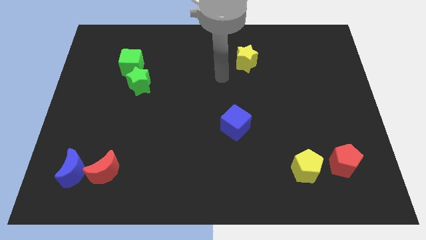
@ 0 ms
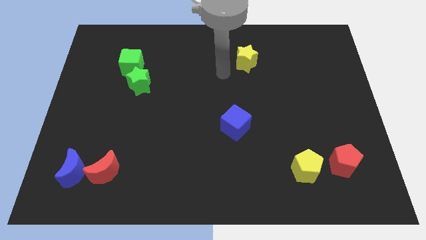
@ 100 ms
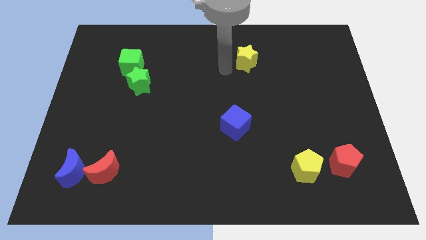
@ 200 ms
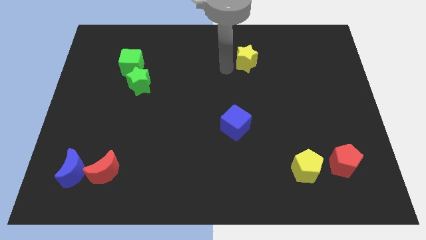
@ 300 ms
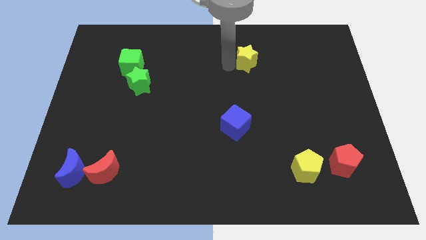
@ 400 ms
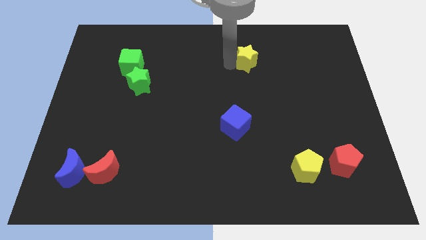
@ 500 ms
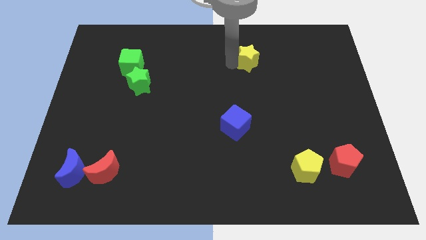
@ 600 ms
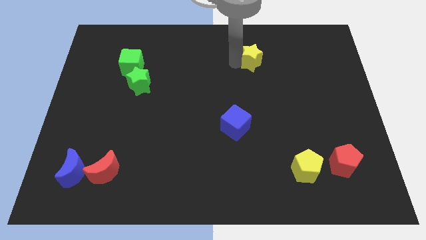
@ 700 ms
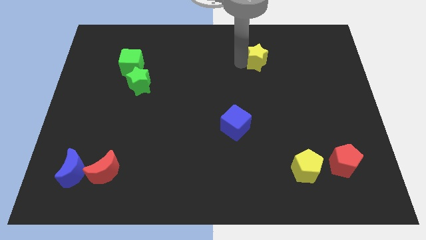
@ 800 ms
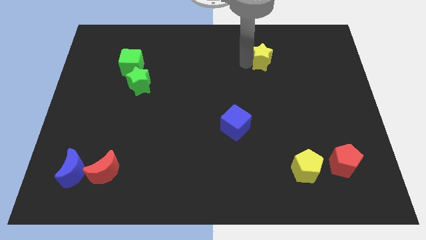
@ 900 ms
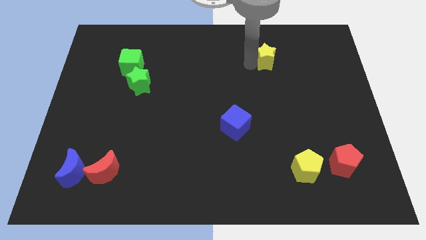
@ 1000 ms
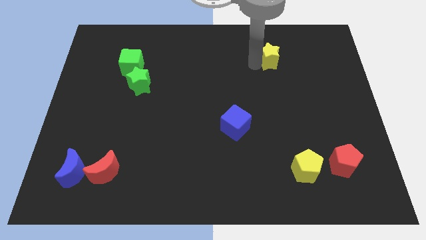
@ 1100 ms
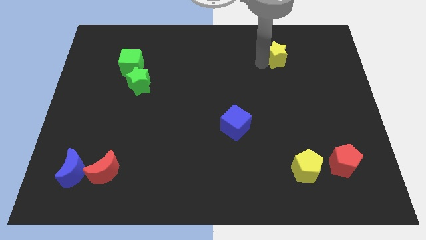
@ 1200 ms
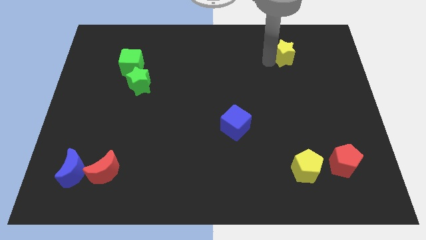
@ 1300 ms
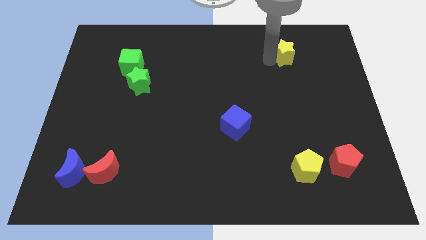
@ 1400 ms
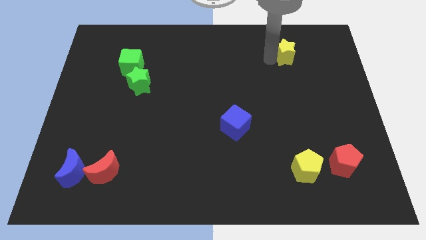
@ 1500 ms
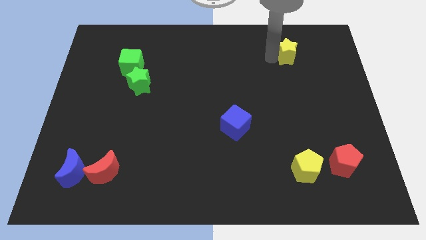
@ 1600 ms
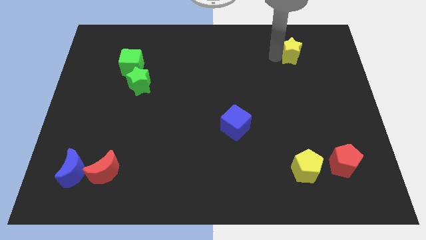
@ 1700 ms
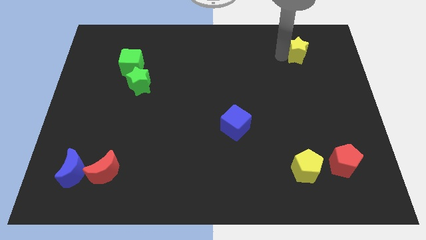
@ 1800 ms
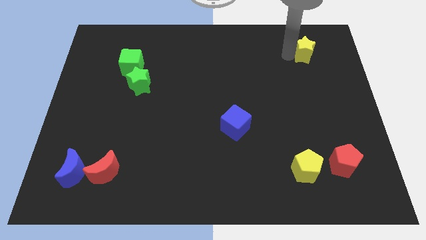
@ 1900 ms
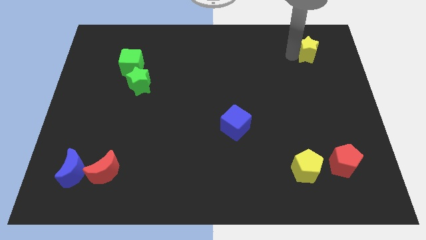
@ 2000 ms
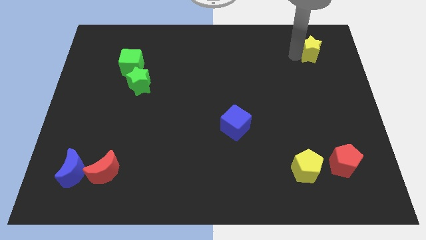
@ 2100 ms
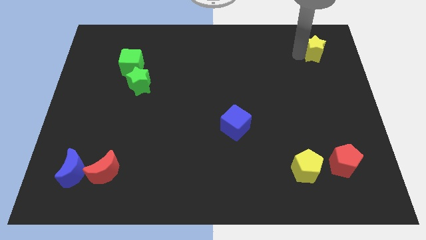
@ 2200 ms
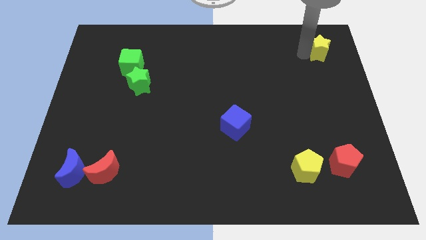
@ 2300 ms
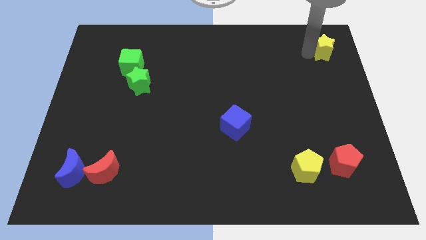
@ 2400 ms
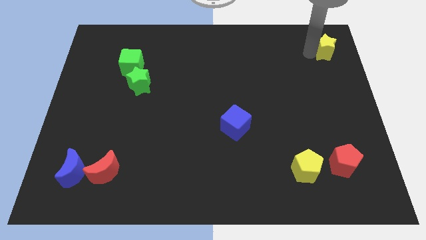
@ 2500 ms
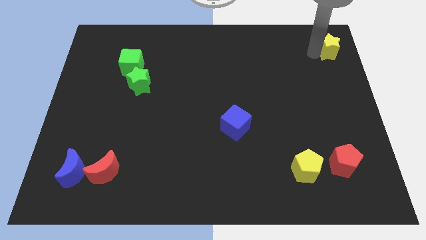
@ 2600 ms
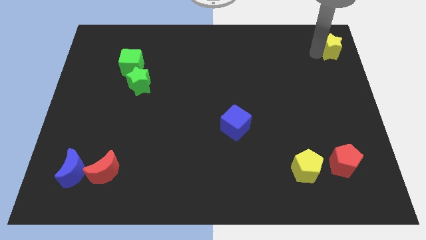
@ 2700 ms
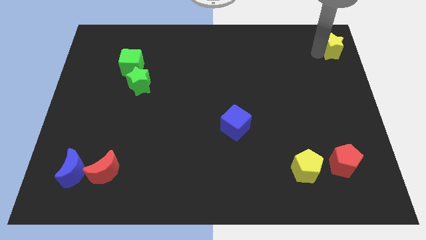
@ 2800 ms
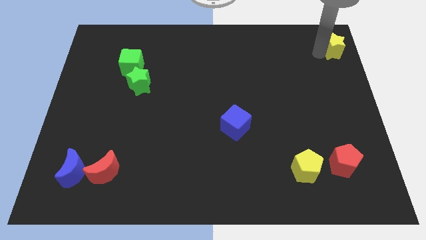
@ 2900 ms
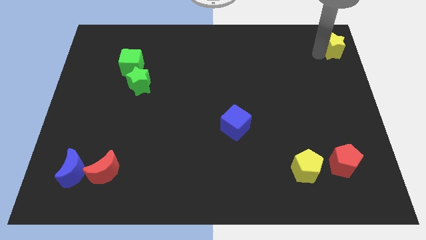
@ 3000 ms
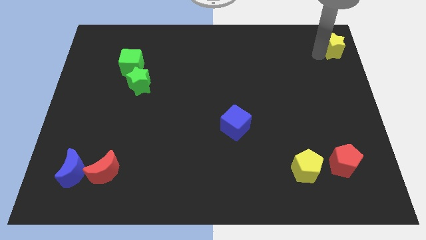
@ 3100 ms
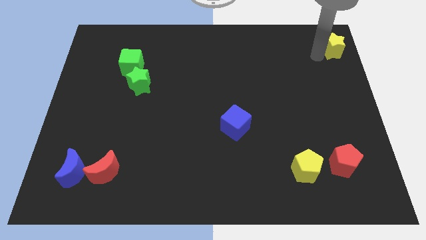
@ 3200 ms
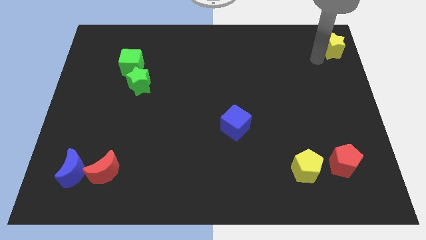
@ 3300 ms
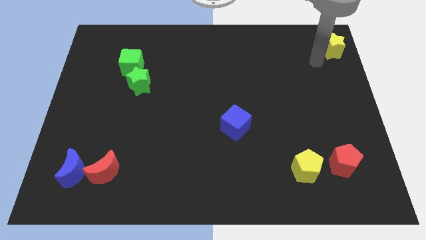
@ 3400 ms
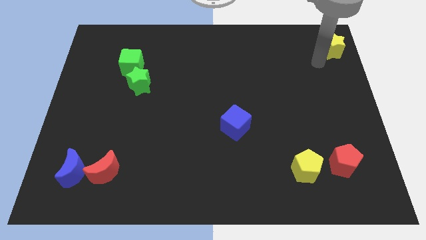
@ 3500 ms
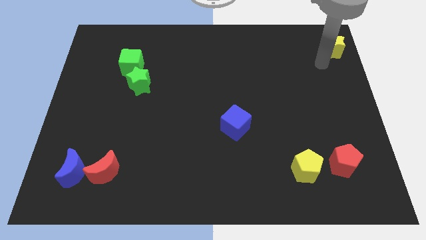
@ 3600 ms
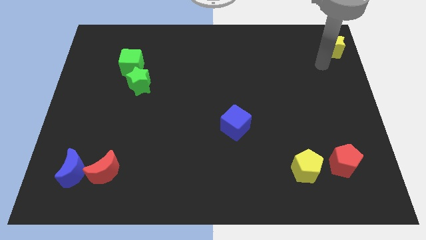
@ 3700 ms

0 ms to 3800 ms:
move the yellow star towards top right side

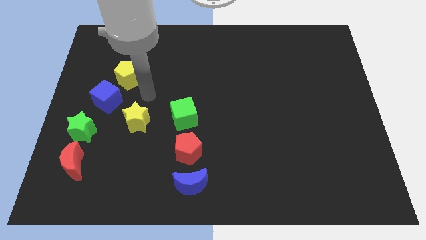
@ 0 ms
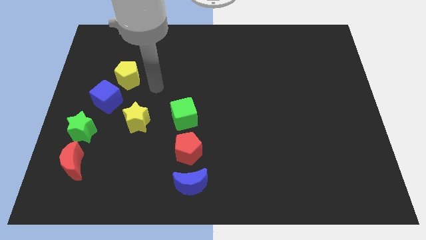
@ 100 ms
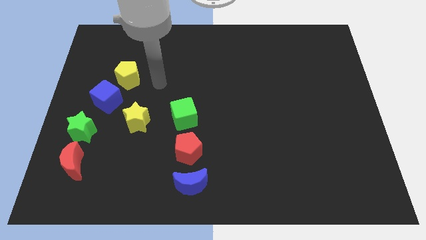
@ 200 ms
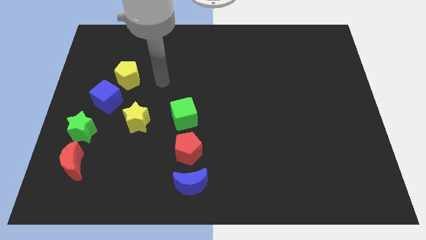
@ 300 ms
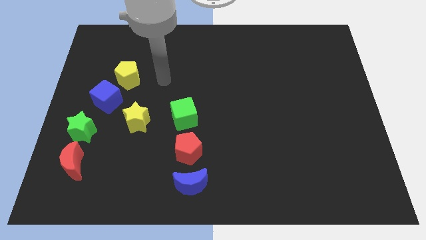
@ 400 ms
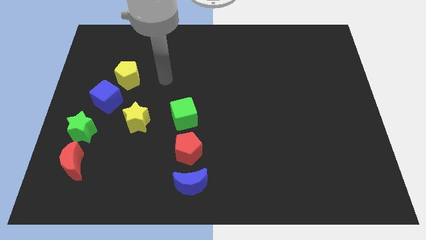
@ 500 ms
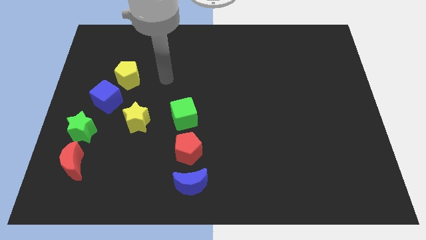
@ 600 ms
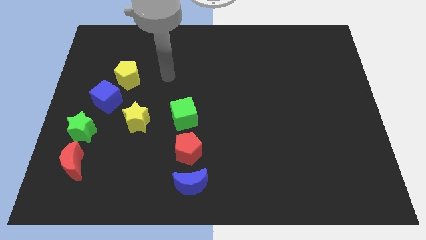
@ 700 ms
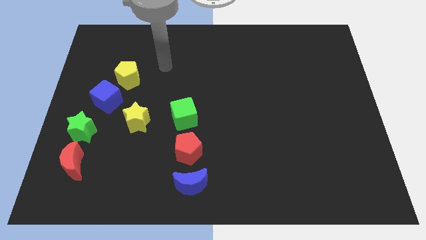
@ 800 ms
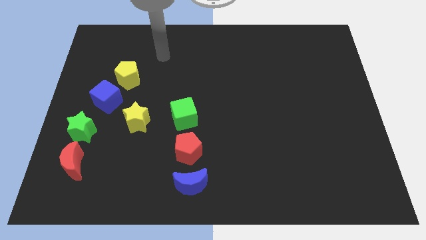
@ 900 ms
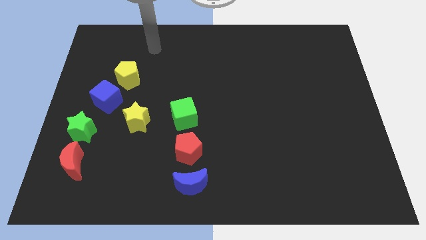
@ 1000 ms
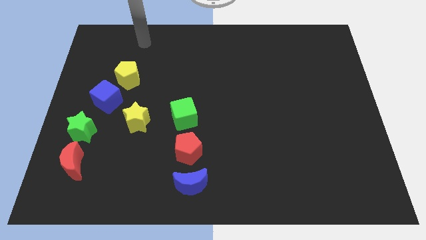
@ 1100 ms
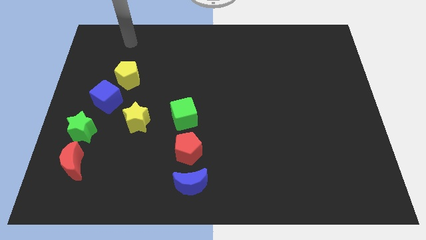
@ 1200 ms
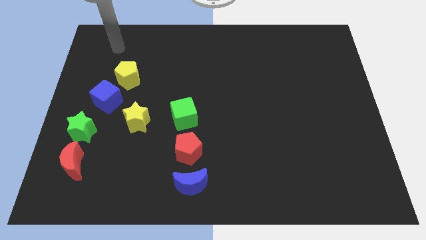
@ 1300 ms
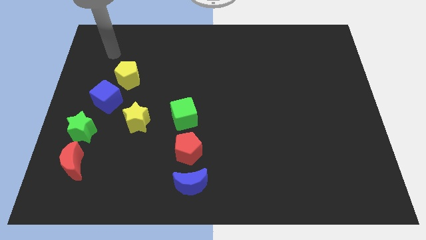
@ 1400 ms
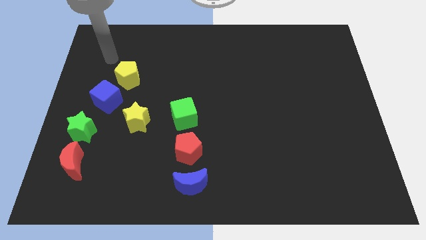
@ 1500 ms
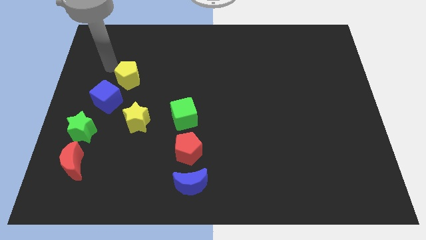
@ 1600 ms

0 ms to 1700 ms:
move your arm away from the yellow star

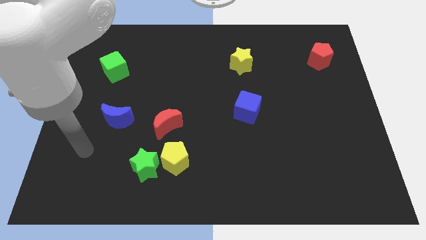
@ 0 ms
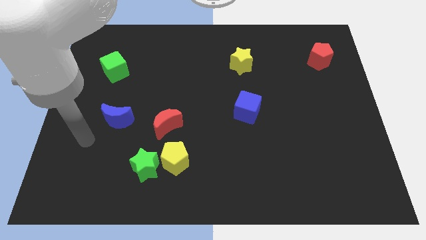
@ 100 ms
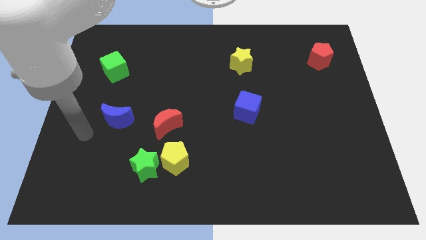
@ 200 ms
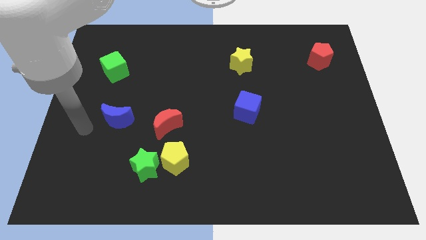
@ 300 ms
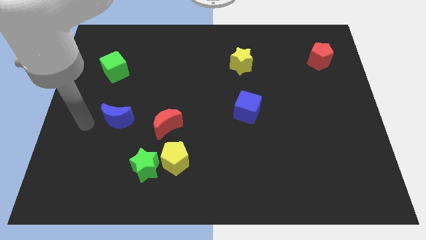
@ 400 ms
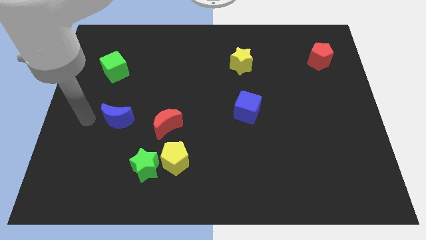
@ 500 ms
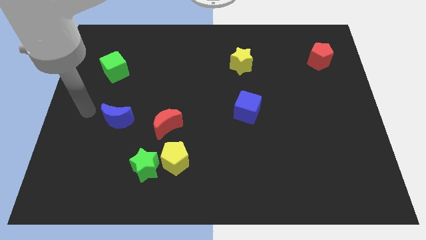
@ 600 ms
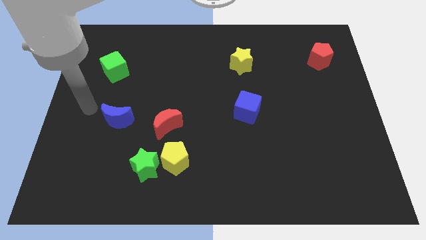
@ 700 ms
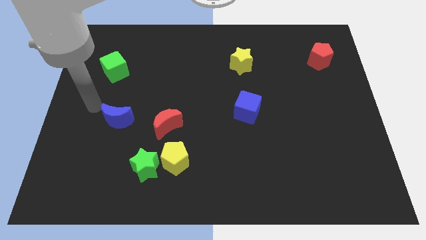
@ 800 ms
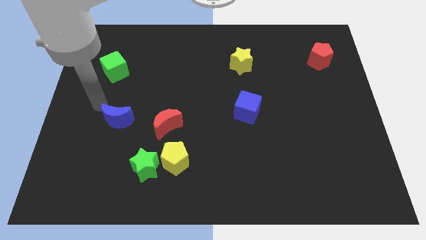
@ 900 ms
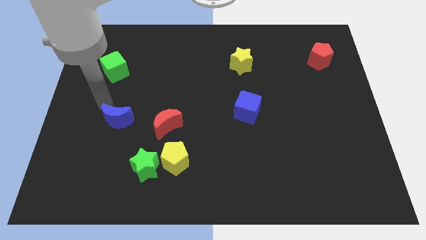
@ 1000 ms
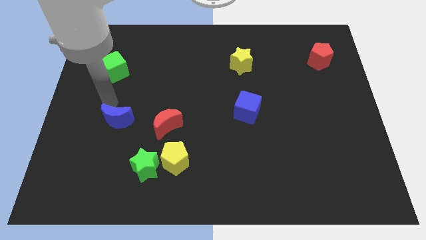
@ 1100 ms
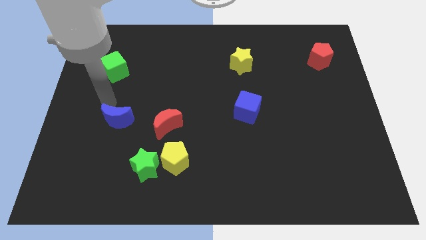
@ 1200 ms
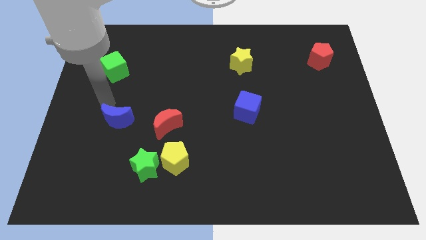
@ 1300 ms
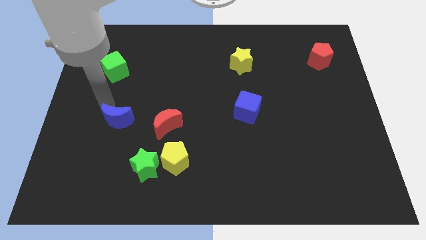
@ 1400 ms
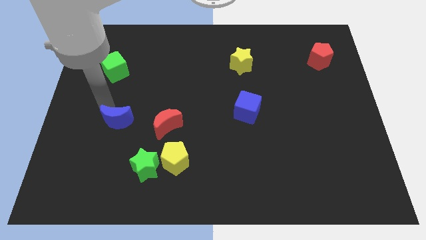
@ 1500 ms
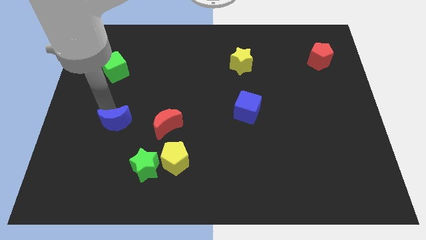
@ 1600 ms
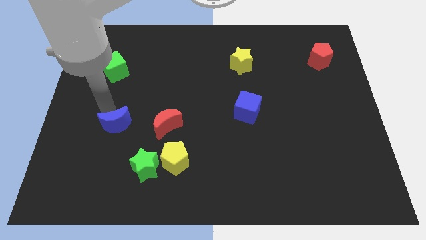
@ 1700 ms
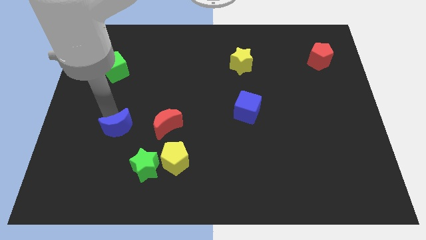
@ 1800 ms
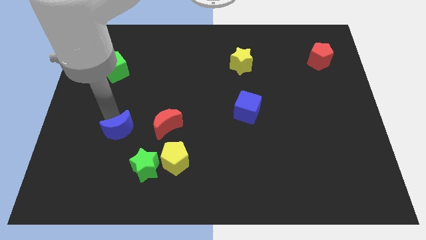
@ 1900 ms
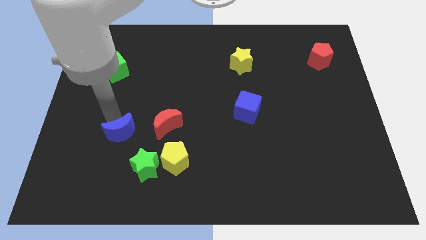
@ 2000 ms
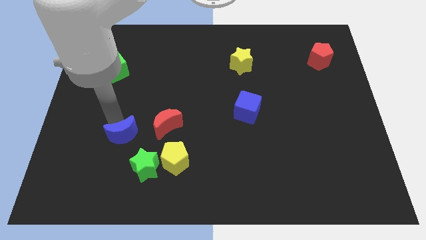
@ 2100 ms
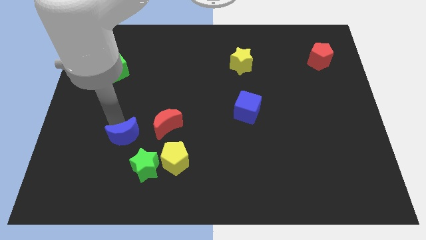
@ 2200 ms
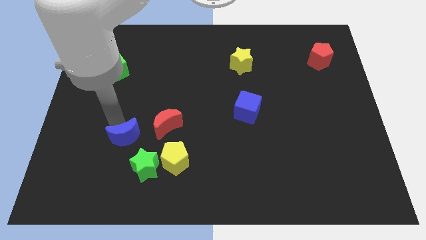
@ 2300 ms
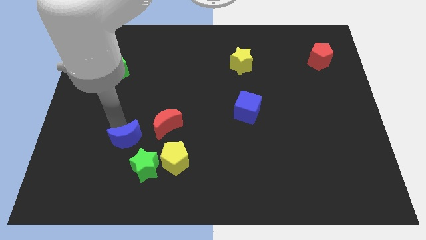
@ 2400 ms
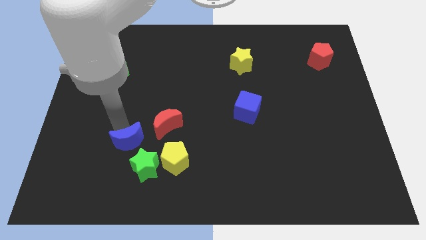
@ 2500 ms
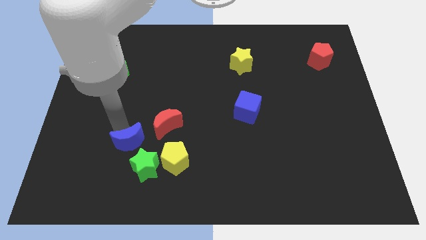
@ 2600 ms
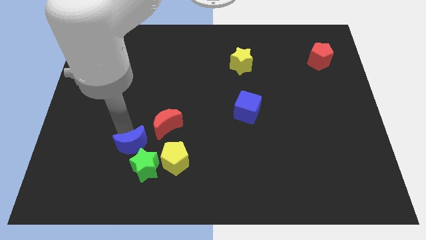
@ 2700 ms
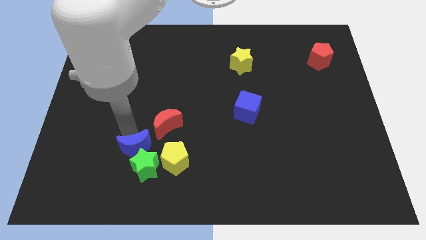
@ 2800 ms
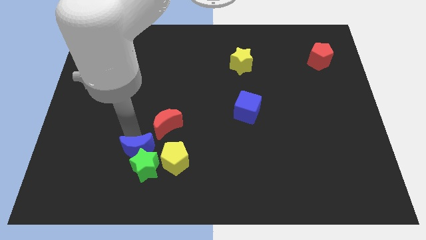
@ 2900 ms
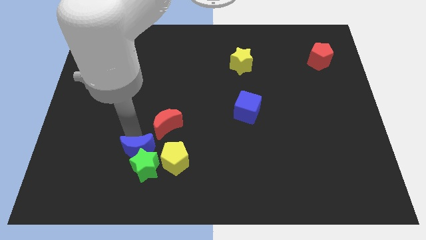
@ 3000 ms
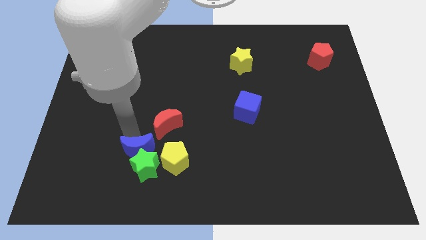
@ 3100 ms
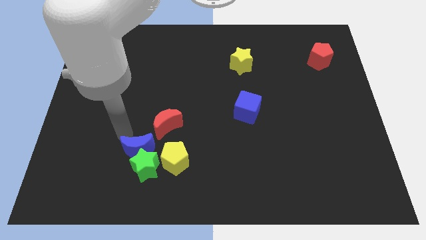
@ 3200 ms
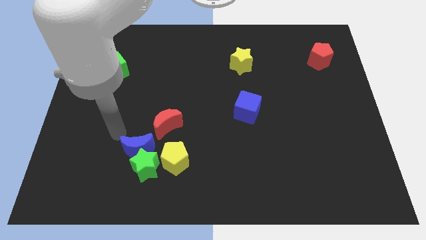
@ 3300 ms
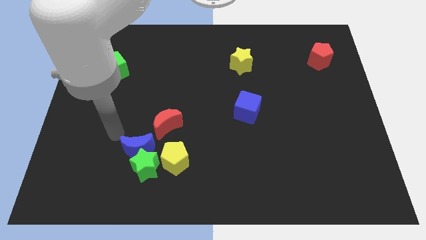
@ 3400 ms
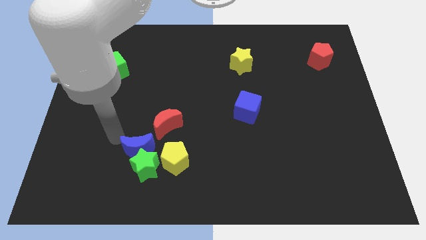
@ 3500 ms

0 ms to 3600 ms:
place the blue moon to the bottom left of the red moon
